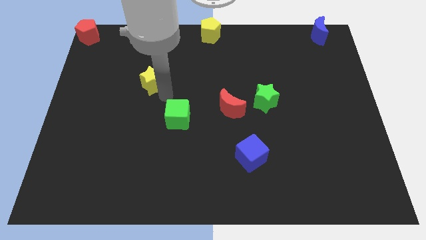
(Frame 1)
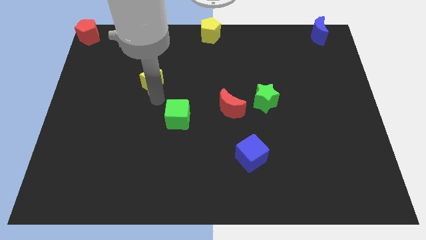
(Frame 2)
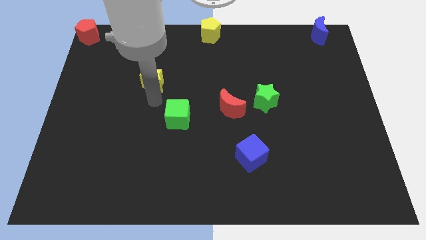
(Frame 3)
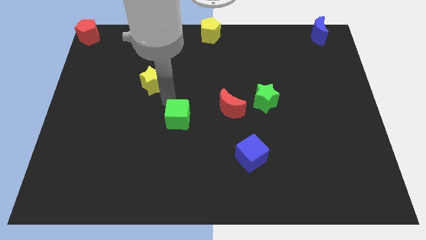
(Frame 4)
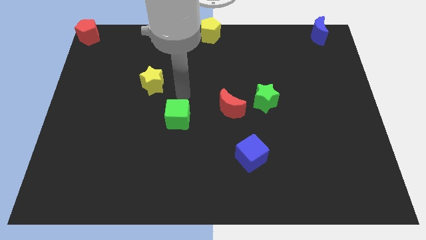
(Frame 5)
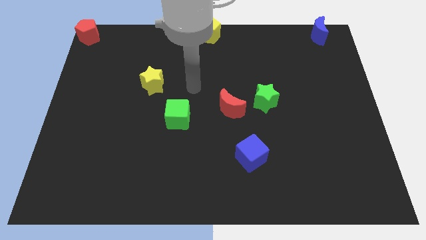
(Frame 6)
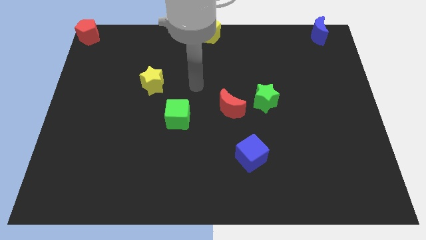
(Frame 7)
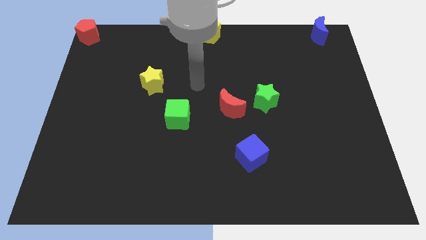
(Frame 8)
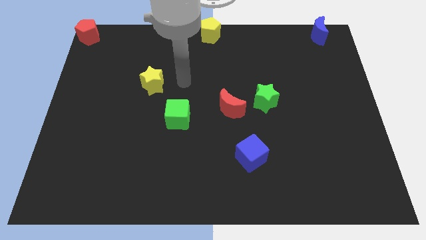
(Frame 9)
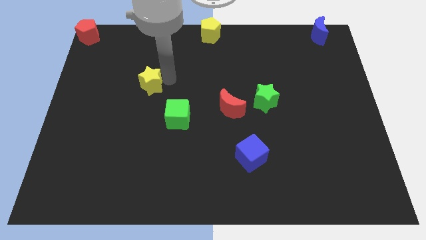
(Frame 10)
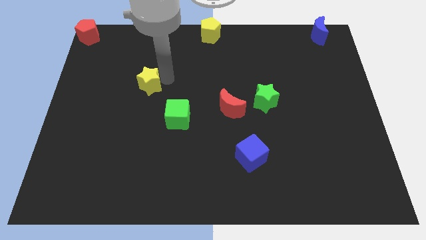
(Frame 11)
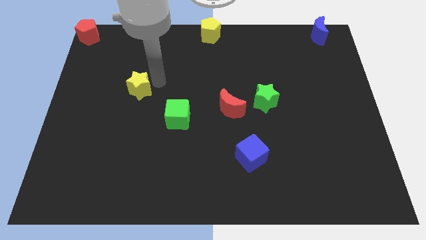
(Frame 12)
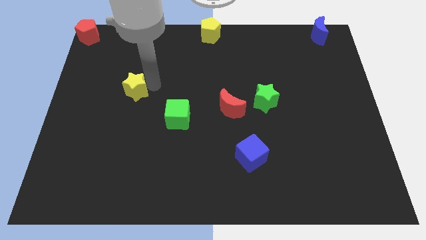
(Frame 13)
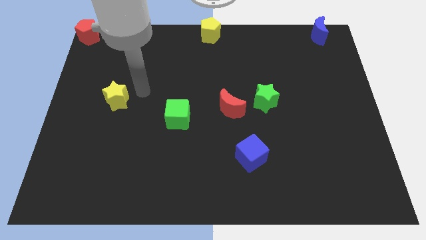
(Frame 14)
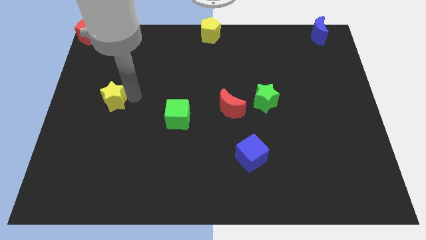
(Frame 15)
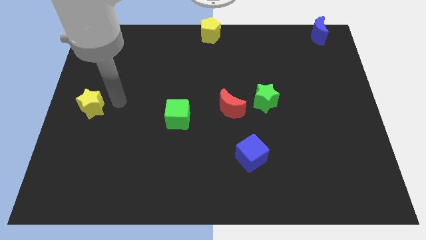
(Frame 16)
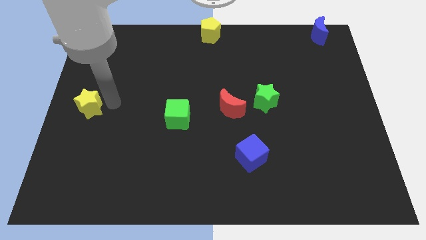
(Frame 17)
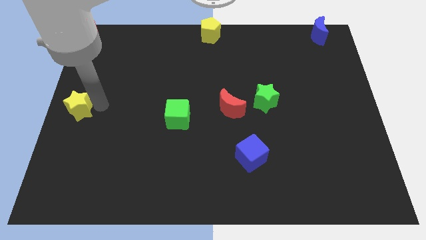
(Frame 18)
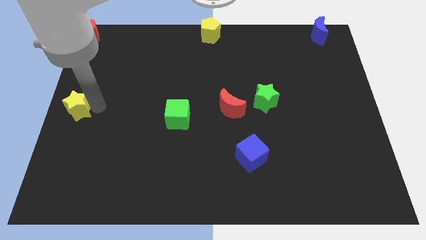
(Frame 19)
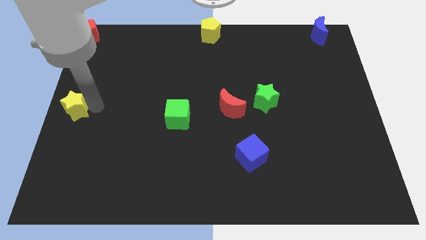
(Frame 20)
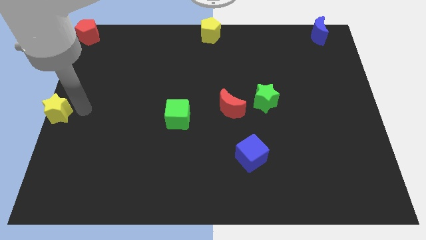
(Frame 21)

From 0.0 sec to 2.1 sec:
push yellow star to the center left

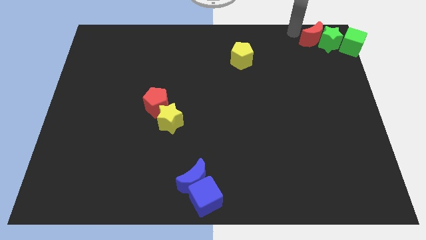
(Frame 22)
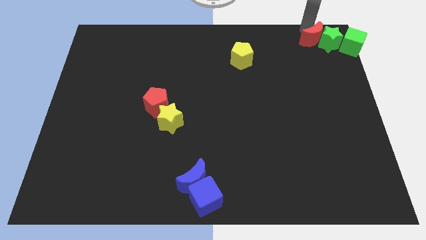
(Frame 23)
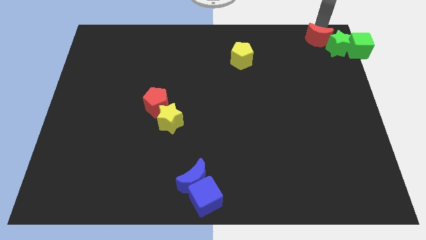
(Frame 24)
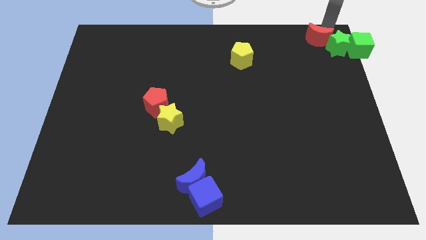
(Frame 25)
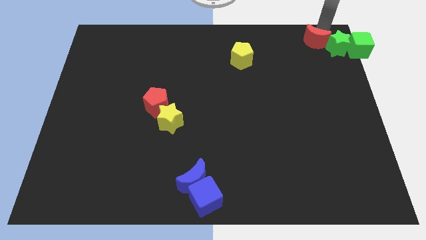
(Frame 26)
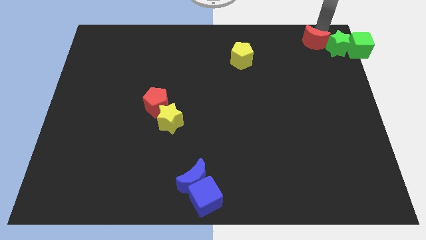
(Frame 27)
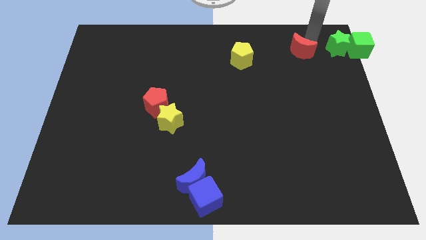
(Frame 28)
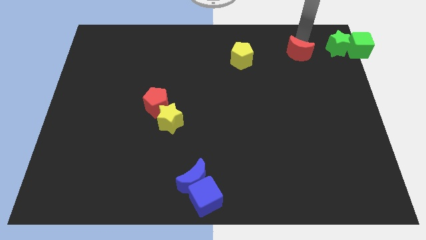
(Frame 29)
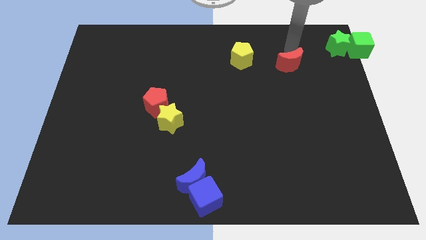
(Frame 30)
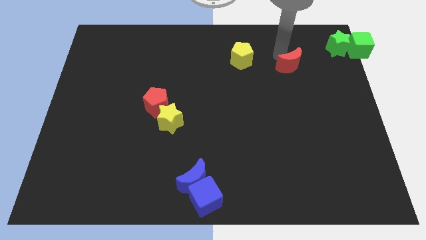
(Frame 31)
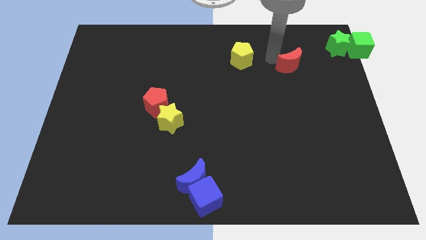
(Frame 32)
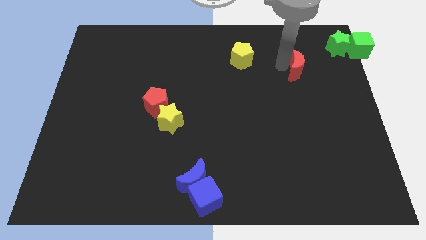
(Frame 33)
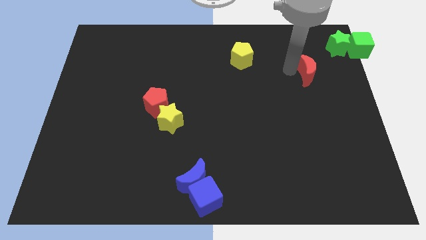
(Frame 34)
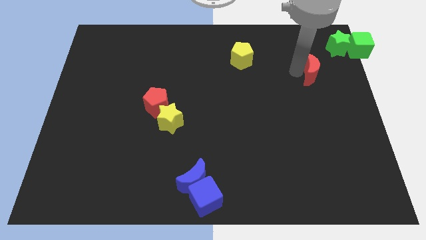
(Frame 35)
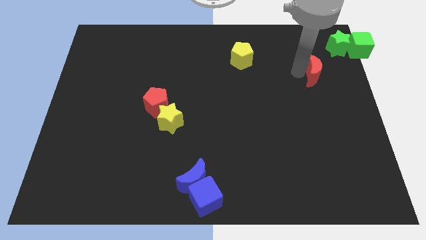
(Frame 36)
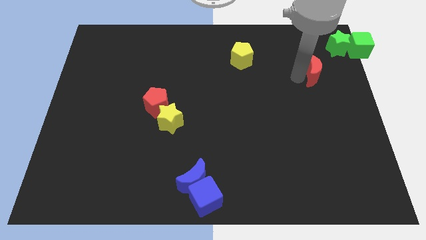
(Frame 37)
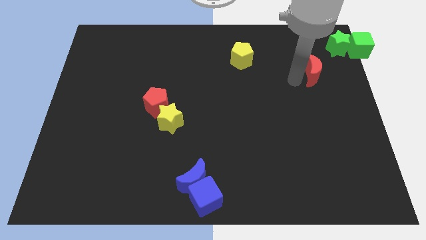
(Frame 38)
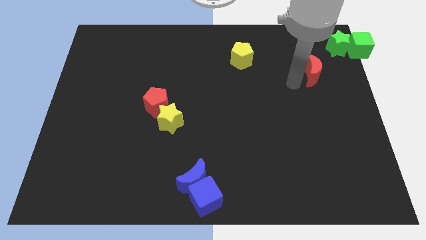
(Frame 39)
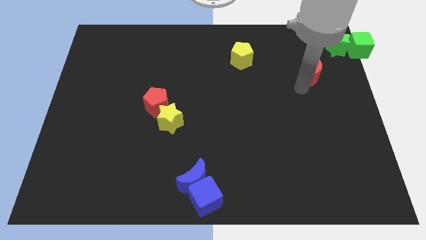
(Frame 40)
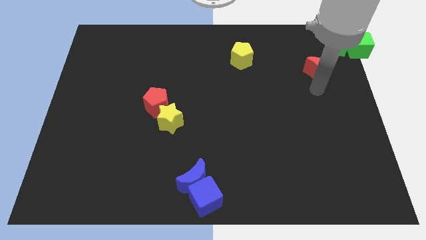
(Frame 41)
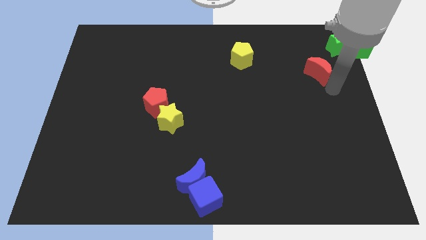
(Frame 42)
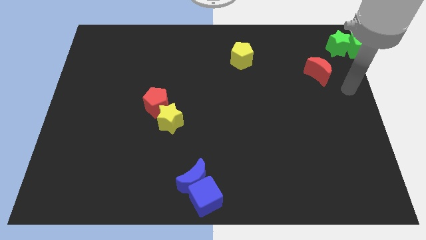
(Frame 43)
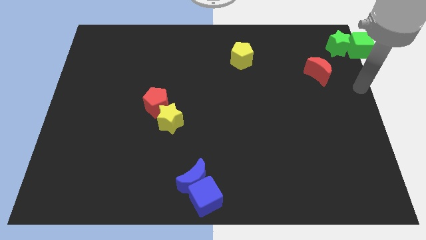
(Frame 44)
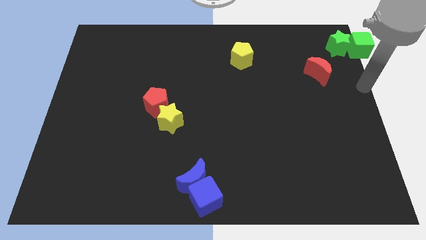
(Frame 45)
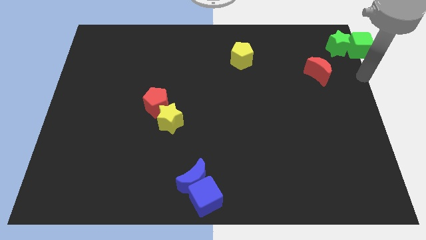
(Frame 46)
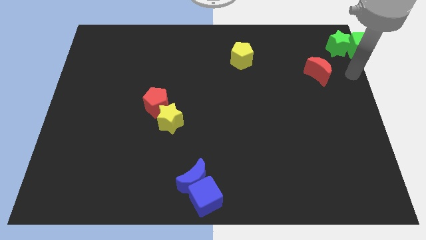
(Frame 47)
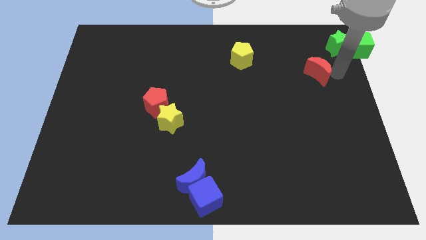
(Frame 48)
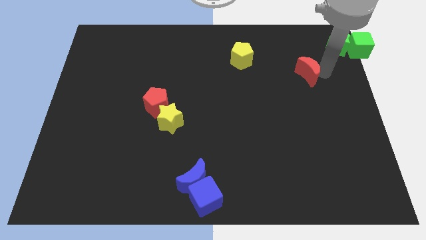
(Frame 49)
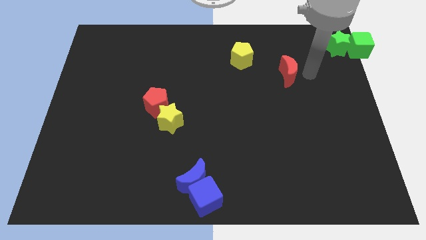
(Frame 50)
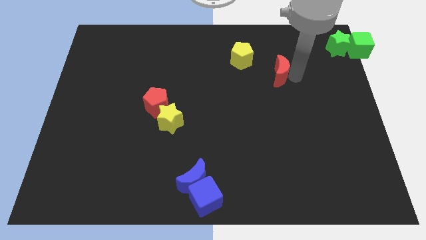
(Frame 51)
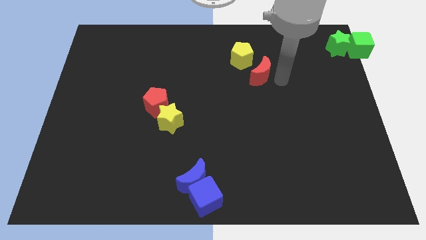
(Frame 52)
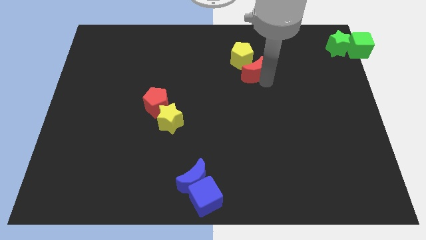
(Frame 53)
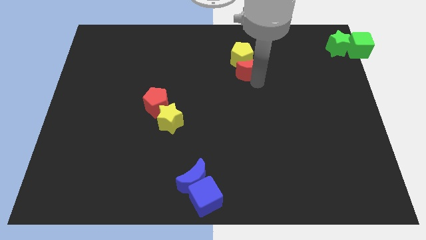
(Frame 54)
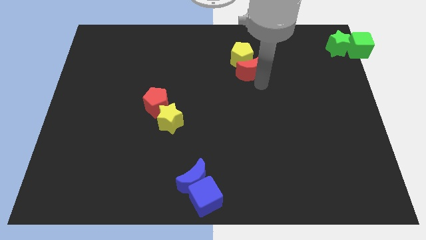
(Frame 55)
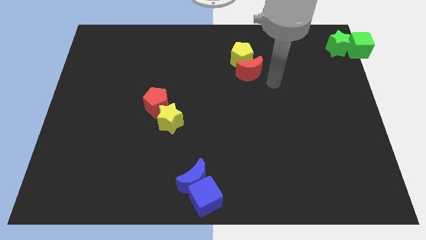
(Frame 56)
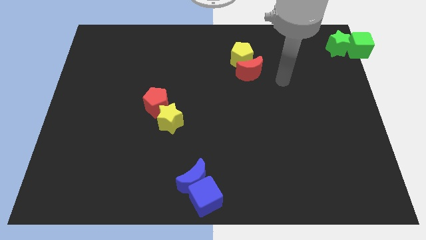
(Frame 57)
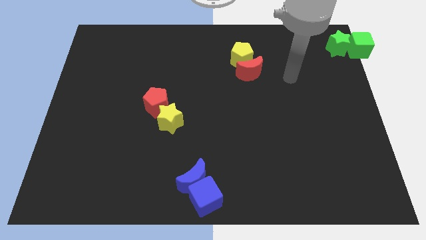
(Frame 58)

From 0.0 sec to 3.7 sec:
place the red moon below the yellow pentagon

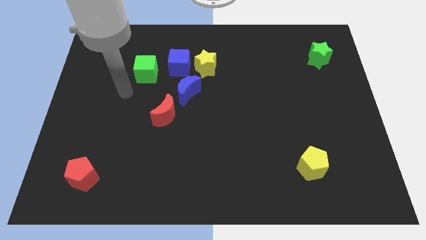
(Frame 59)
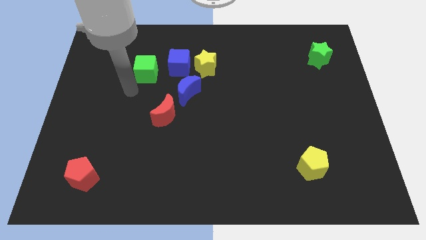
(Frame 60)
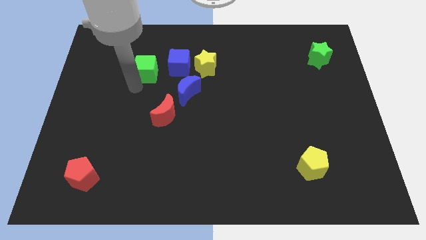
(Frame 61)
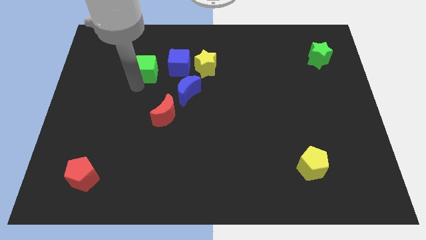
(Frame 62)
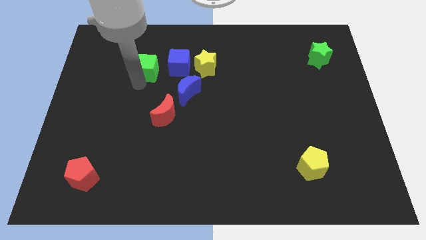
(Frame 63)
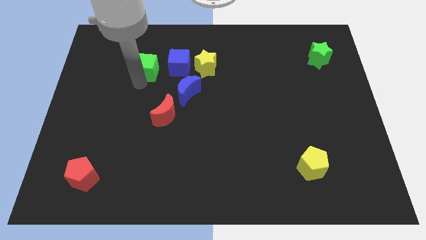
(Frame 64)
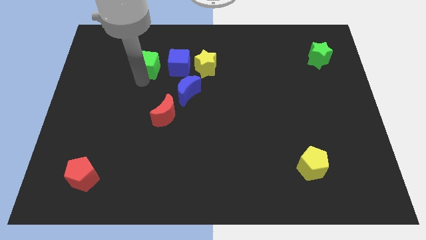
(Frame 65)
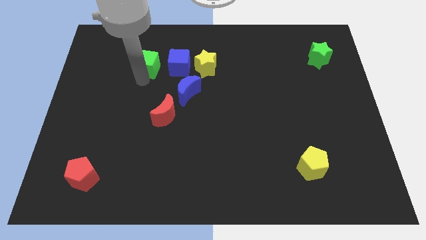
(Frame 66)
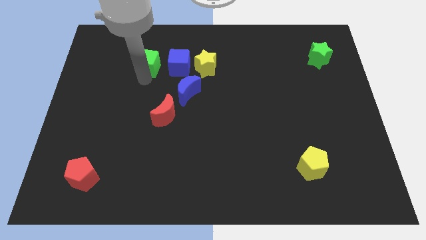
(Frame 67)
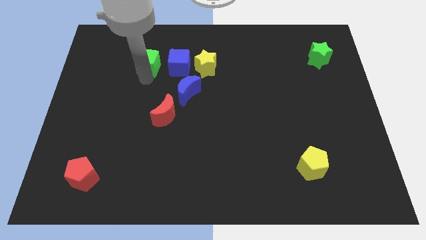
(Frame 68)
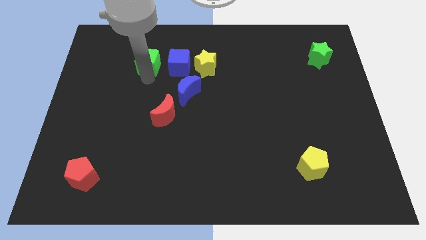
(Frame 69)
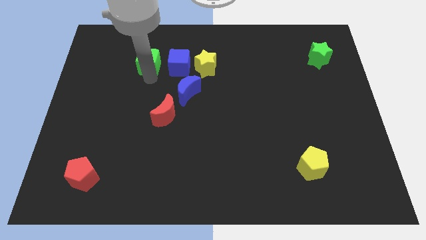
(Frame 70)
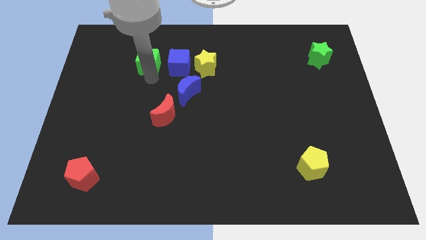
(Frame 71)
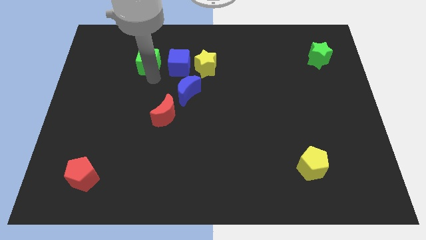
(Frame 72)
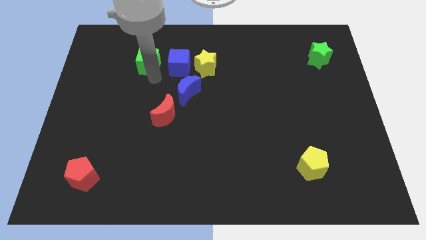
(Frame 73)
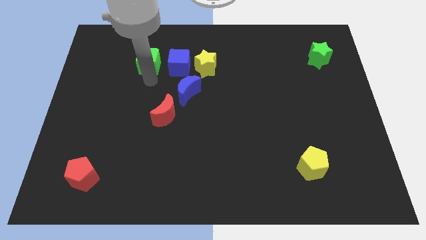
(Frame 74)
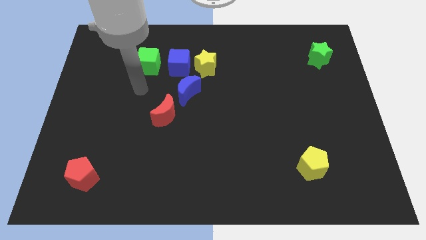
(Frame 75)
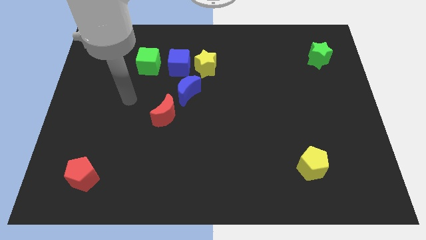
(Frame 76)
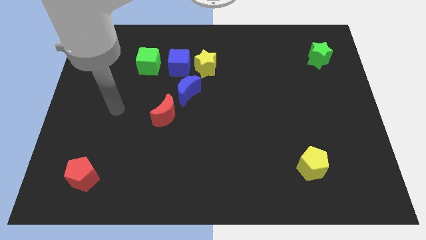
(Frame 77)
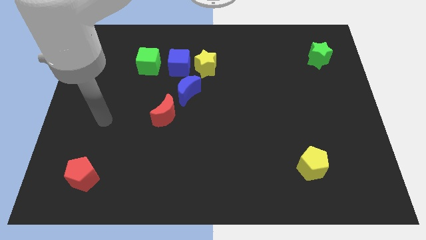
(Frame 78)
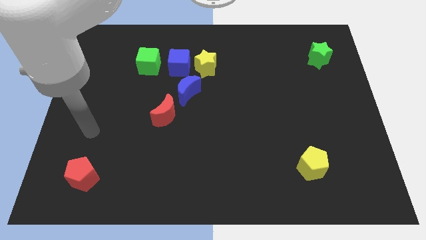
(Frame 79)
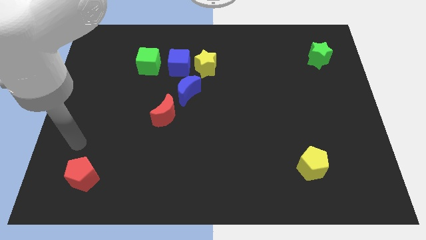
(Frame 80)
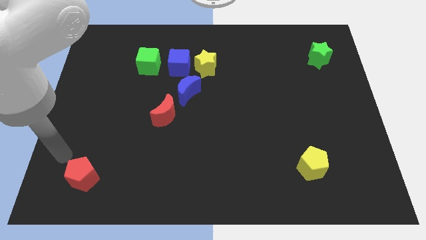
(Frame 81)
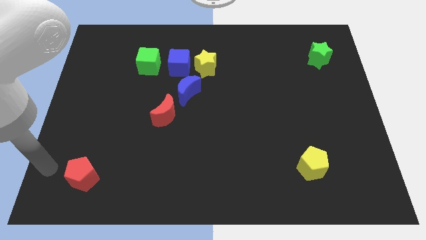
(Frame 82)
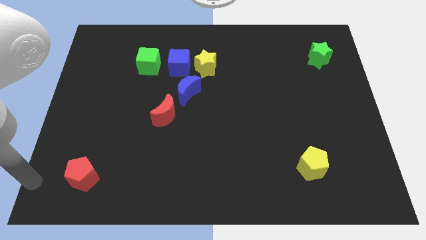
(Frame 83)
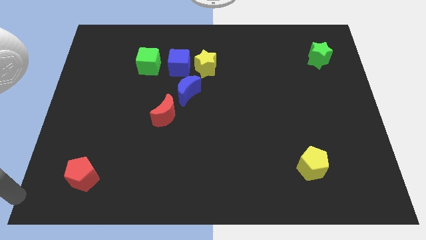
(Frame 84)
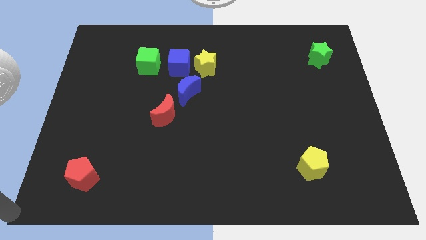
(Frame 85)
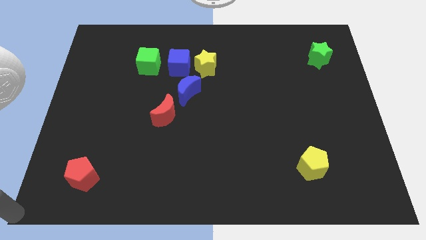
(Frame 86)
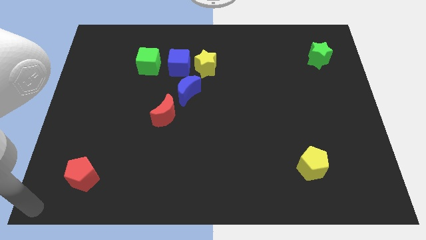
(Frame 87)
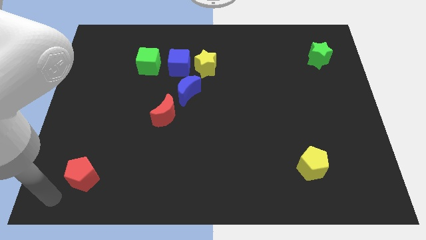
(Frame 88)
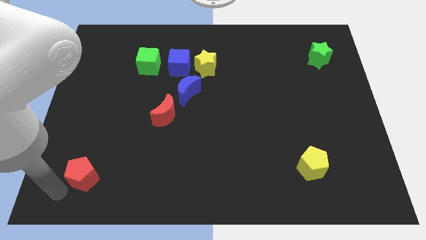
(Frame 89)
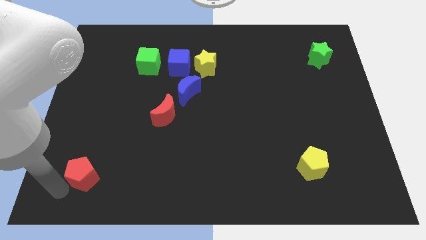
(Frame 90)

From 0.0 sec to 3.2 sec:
place the arm near the red pentagon
